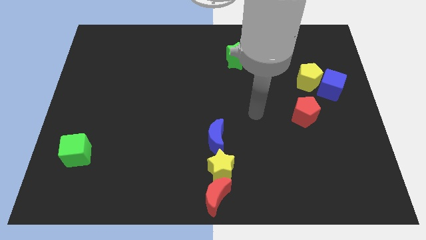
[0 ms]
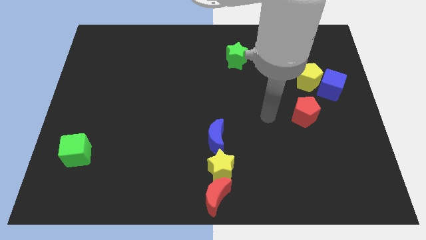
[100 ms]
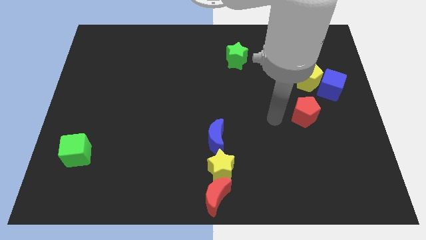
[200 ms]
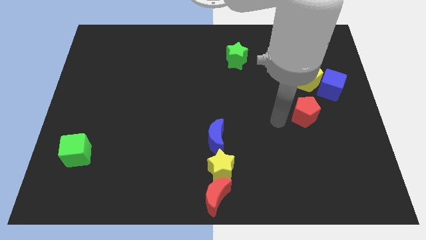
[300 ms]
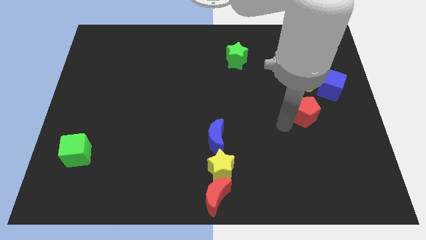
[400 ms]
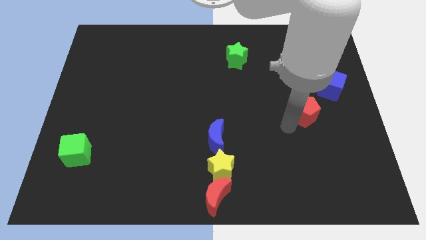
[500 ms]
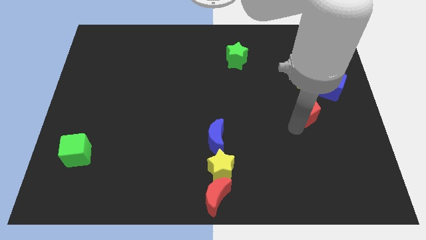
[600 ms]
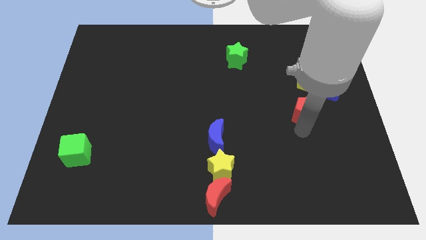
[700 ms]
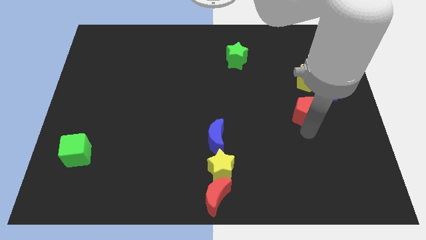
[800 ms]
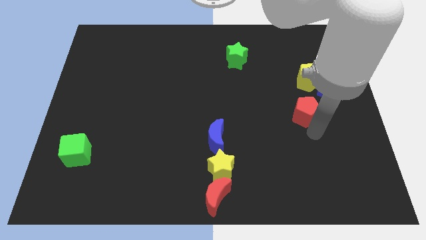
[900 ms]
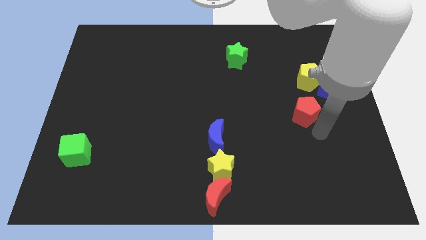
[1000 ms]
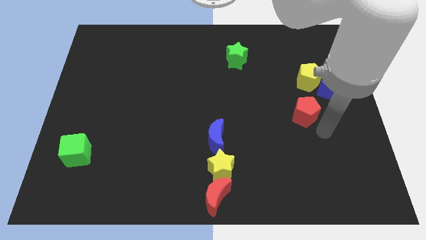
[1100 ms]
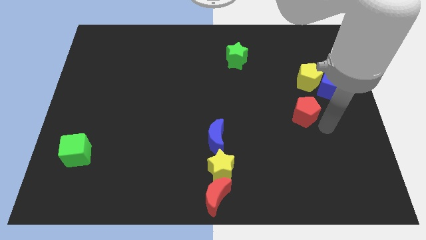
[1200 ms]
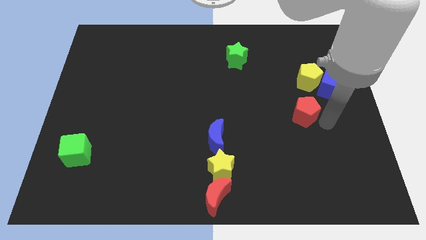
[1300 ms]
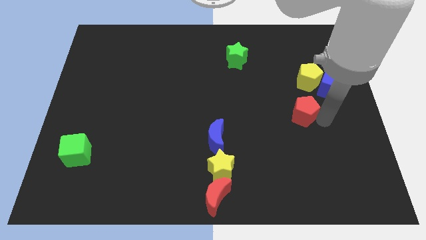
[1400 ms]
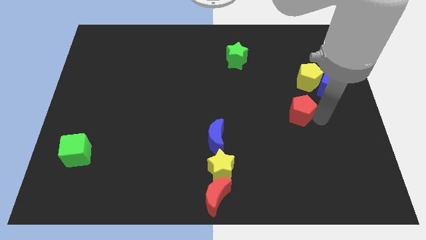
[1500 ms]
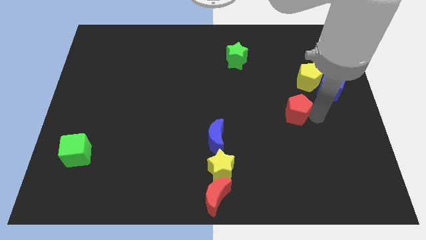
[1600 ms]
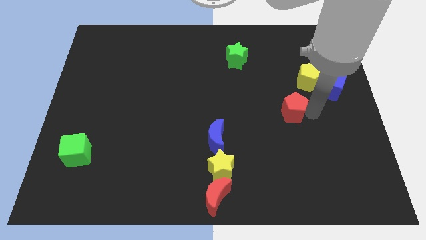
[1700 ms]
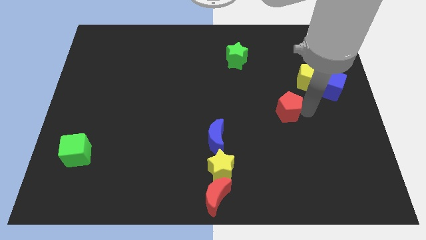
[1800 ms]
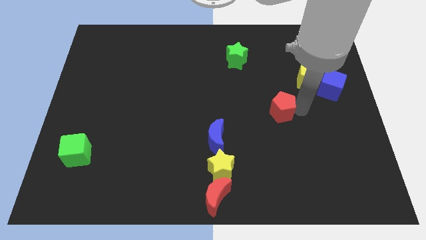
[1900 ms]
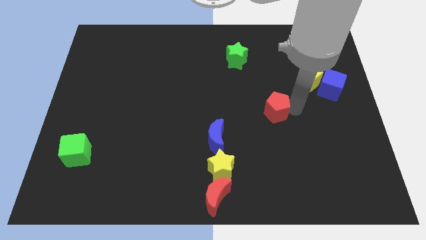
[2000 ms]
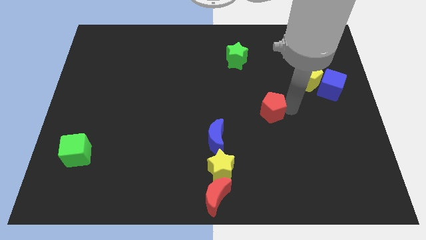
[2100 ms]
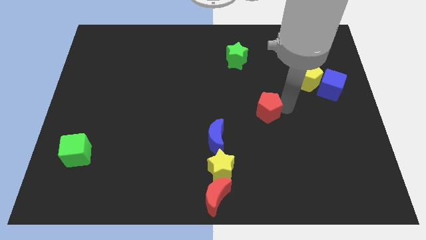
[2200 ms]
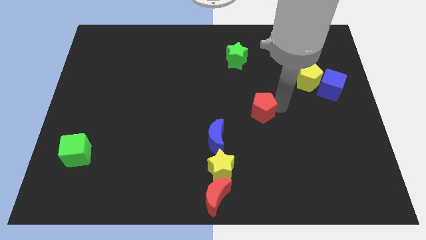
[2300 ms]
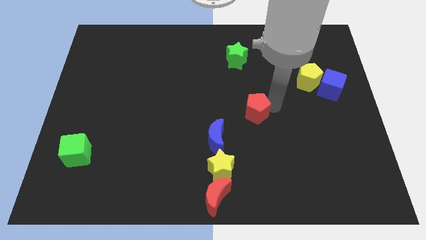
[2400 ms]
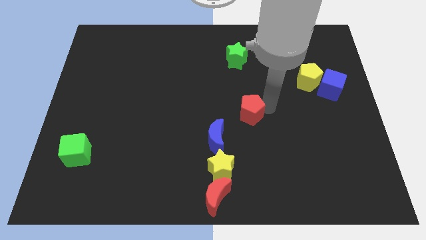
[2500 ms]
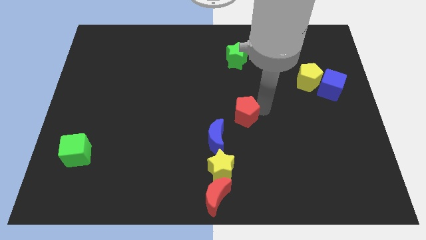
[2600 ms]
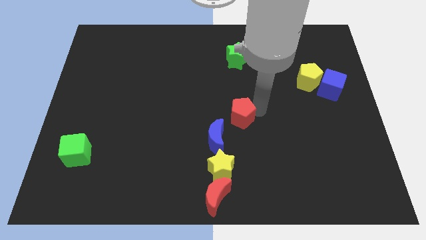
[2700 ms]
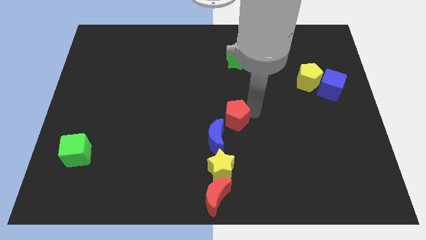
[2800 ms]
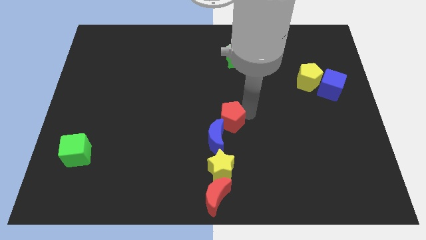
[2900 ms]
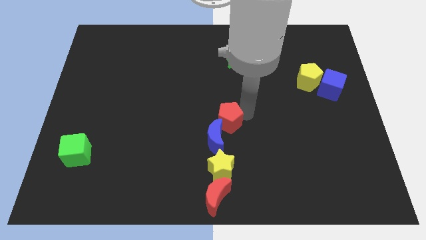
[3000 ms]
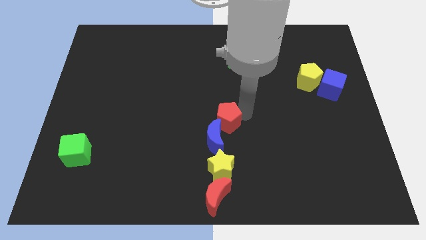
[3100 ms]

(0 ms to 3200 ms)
move red pentagon above blue moon

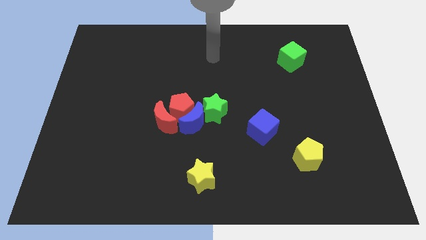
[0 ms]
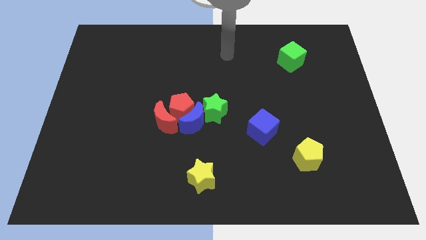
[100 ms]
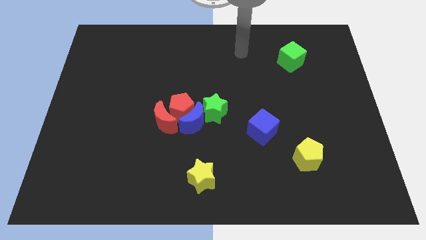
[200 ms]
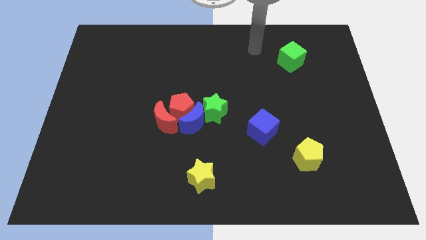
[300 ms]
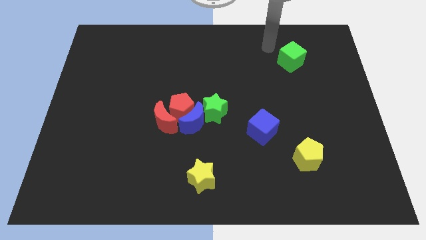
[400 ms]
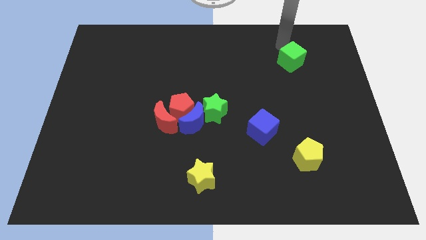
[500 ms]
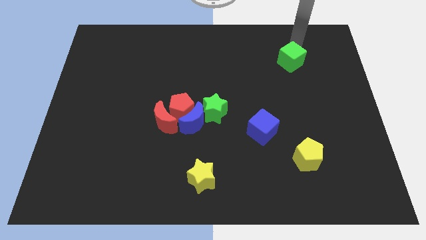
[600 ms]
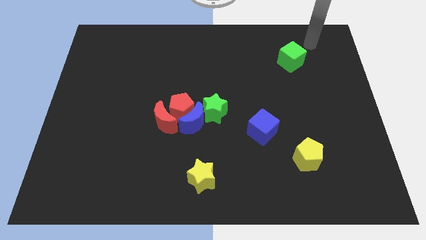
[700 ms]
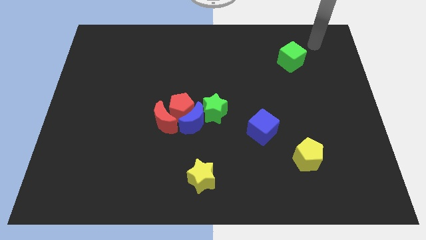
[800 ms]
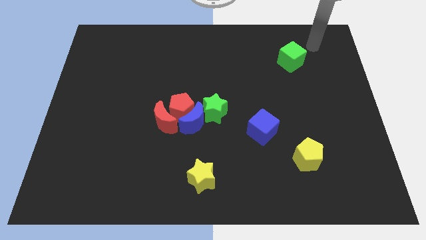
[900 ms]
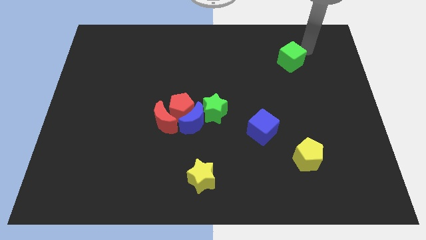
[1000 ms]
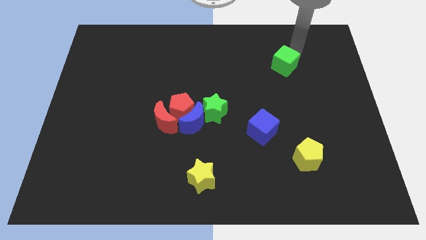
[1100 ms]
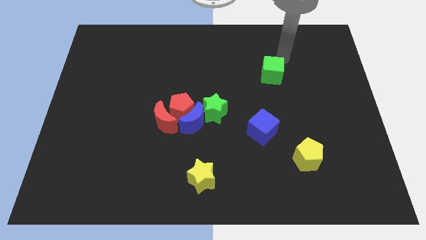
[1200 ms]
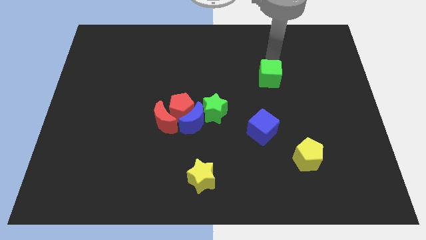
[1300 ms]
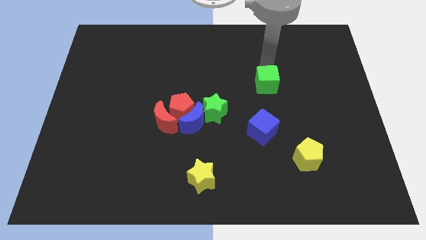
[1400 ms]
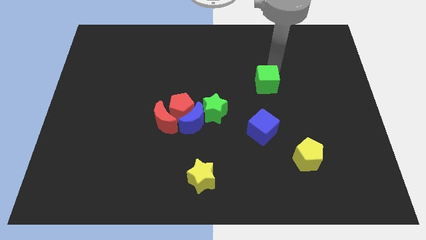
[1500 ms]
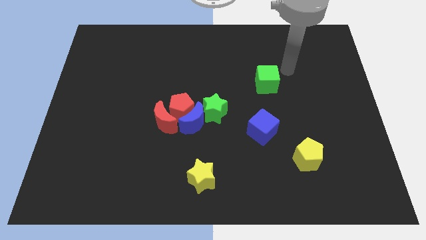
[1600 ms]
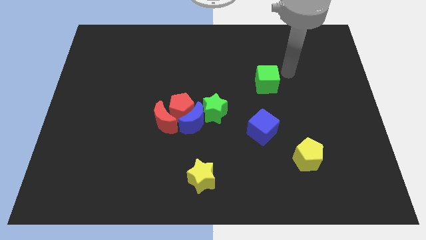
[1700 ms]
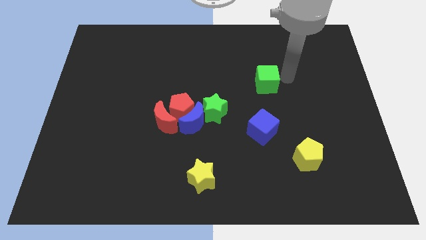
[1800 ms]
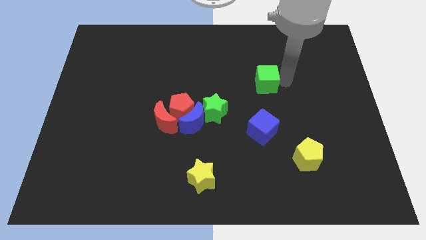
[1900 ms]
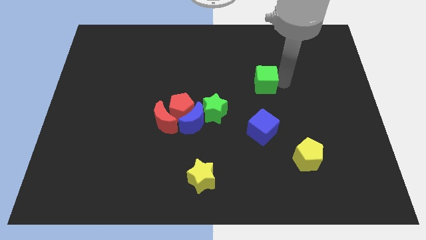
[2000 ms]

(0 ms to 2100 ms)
move the green cube above the blue cube

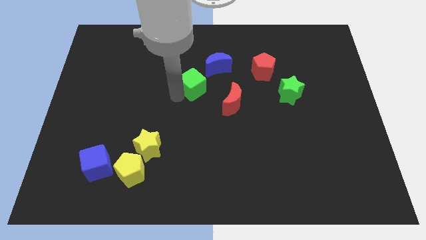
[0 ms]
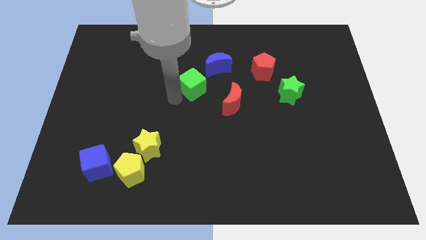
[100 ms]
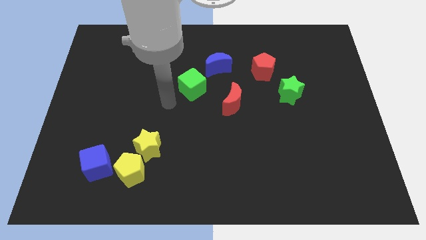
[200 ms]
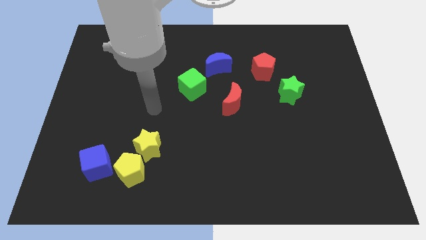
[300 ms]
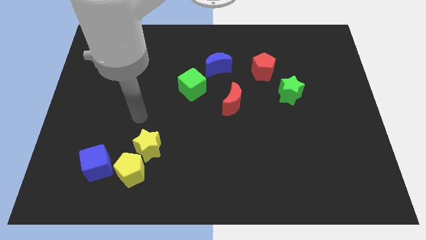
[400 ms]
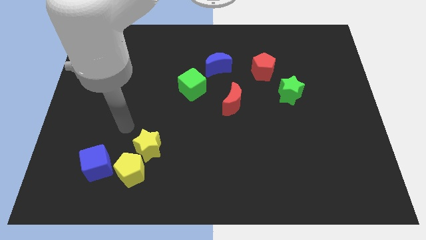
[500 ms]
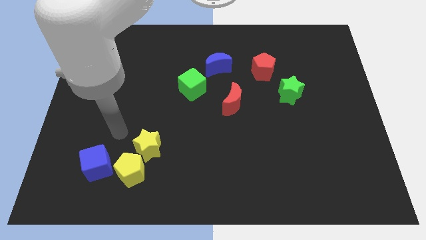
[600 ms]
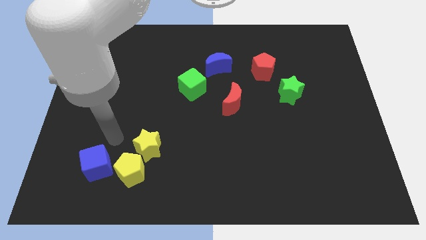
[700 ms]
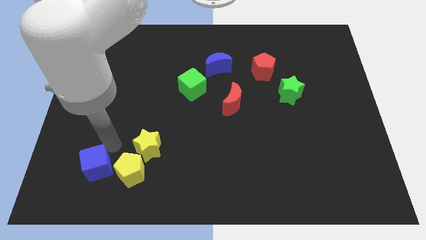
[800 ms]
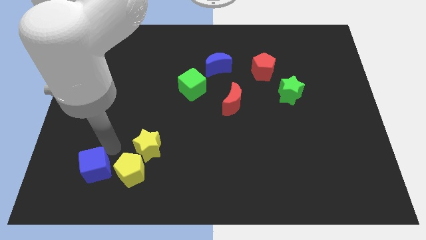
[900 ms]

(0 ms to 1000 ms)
place the arm diagonally to the blue cube

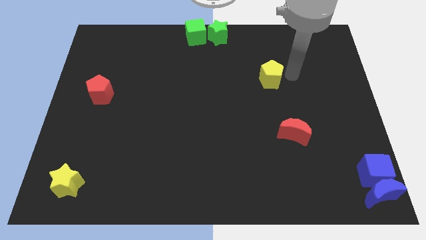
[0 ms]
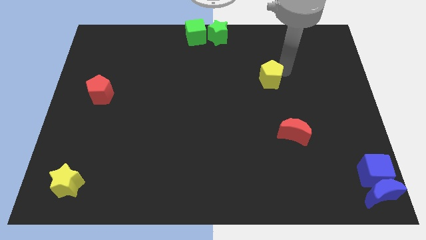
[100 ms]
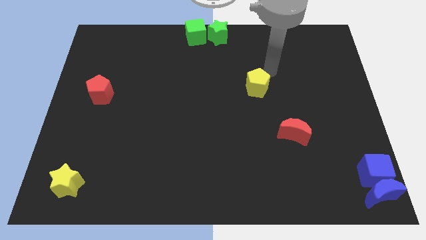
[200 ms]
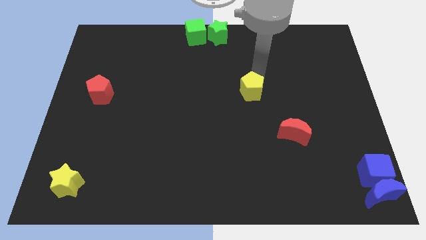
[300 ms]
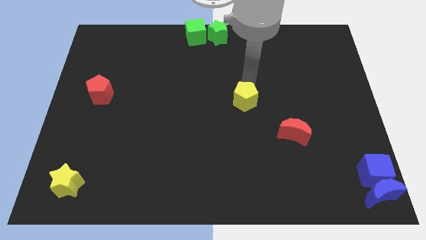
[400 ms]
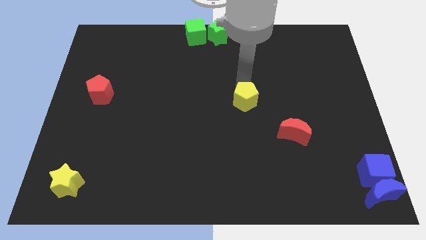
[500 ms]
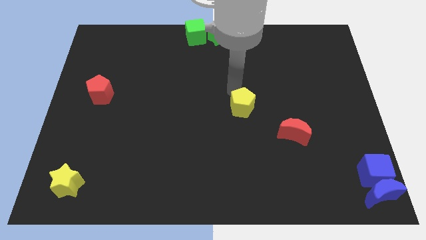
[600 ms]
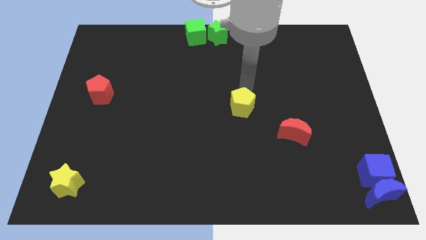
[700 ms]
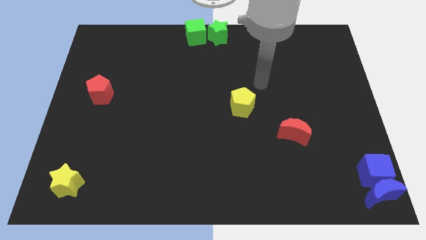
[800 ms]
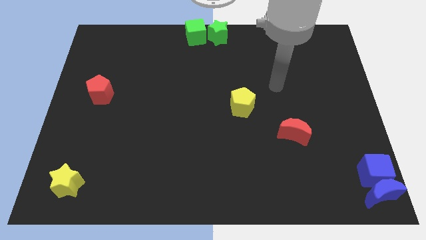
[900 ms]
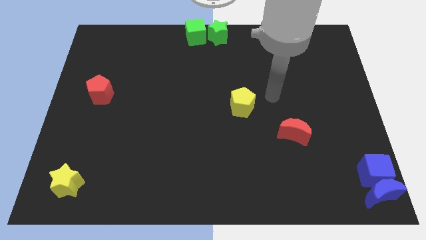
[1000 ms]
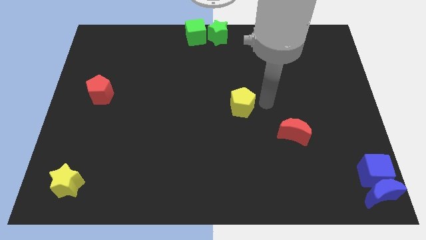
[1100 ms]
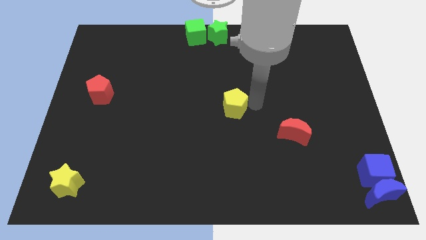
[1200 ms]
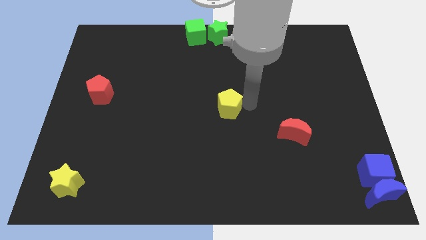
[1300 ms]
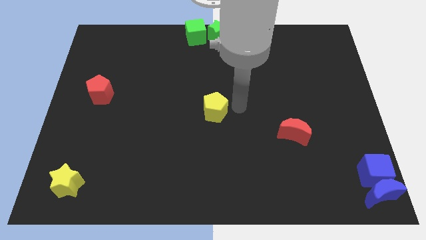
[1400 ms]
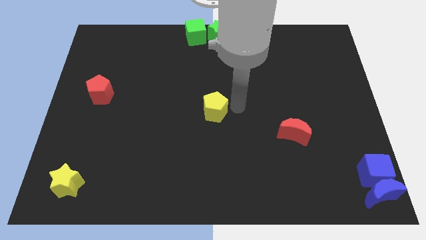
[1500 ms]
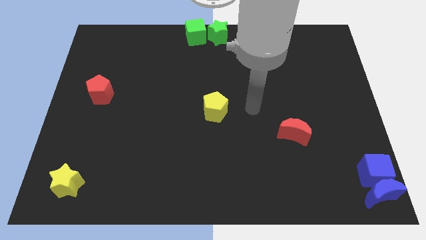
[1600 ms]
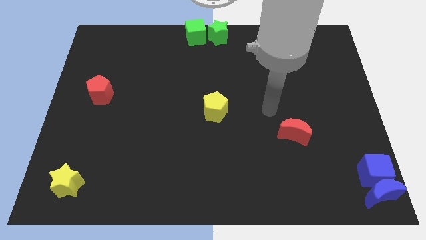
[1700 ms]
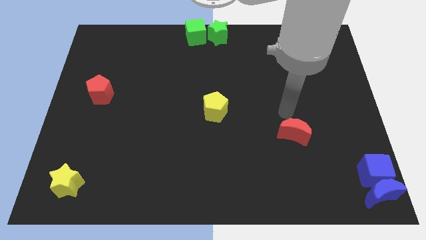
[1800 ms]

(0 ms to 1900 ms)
push the yellow pentagon towards the center of the board of the board

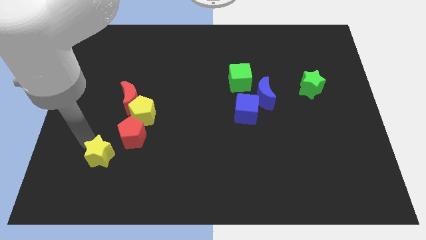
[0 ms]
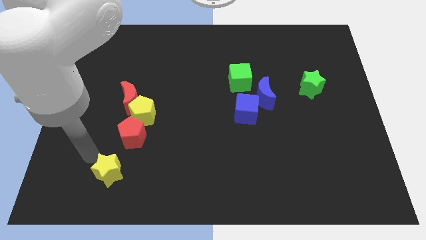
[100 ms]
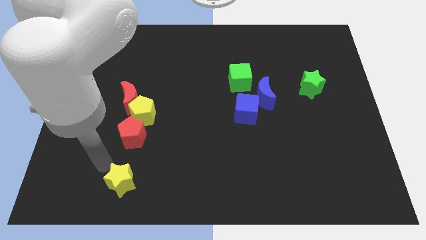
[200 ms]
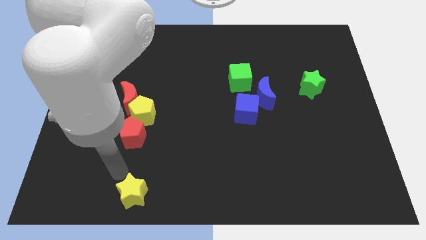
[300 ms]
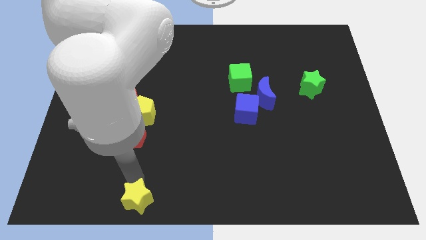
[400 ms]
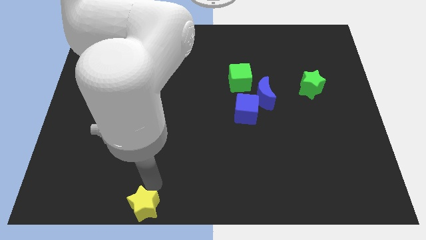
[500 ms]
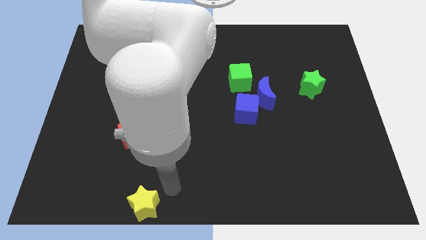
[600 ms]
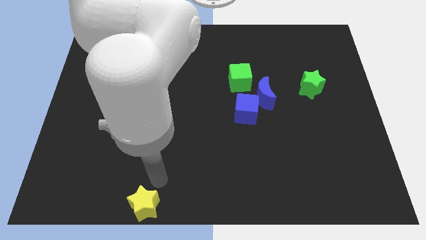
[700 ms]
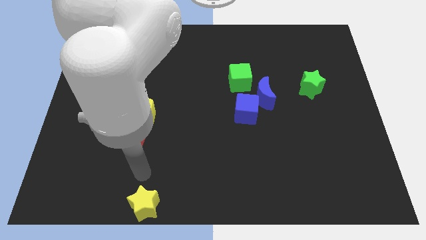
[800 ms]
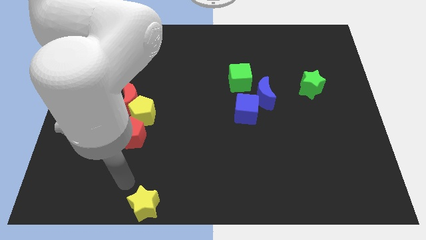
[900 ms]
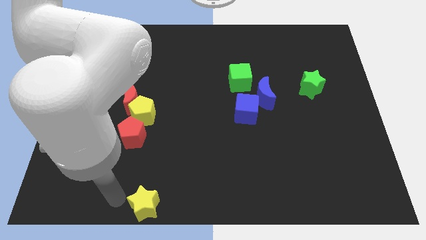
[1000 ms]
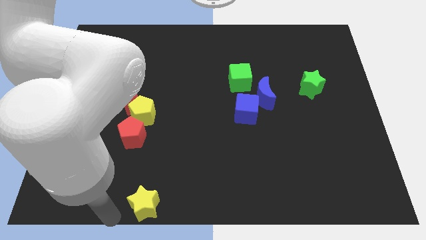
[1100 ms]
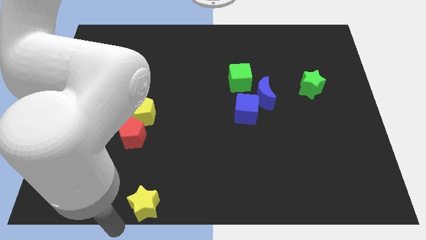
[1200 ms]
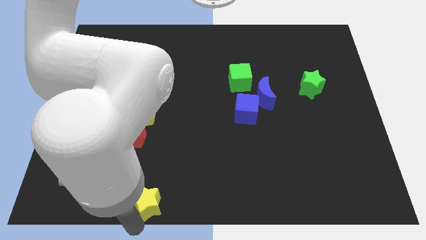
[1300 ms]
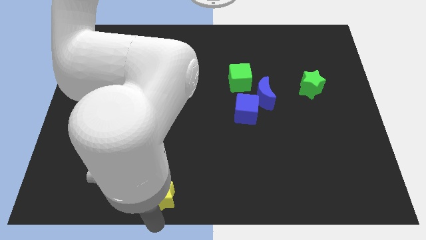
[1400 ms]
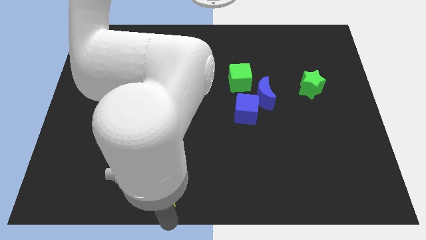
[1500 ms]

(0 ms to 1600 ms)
move the yellow star towards the bottom center of the board
